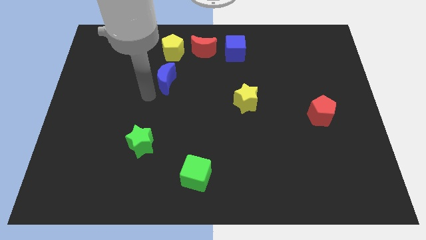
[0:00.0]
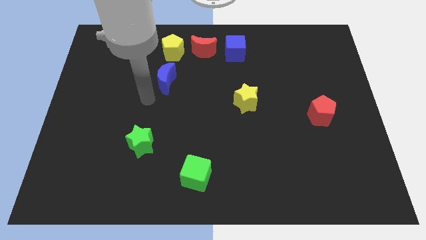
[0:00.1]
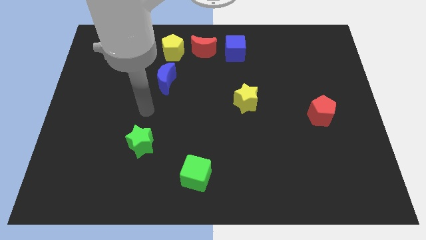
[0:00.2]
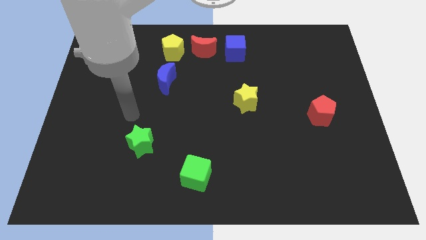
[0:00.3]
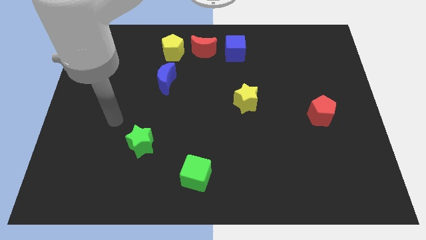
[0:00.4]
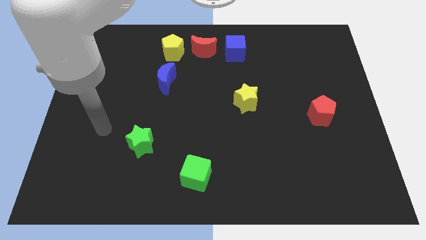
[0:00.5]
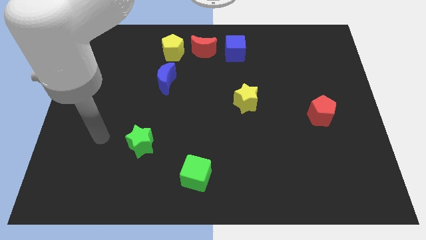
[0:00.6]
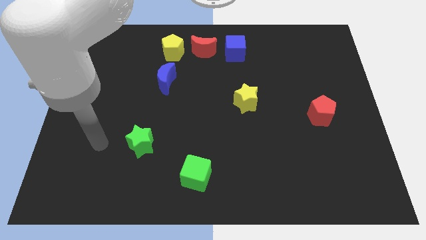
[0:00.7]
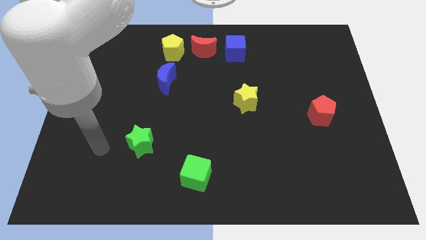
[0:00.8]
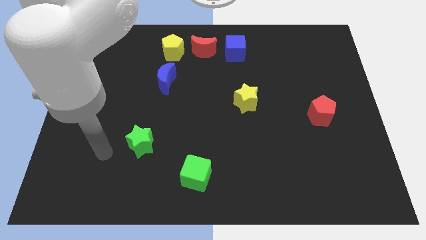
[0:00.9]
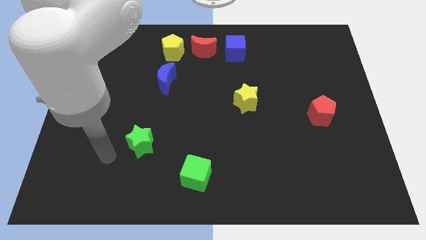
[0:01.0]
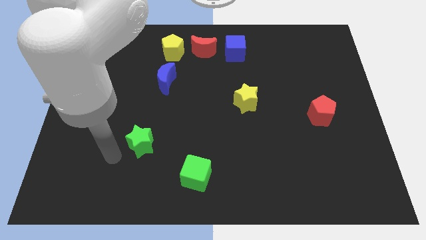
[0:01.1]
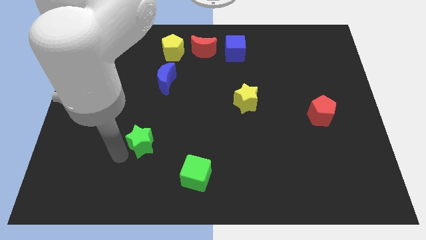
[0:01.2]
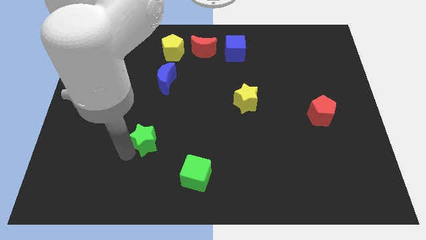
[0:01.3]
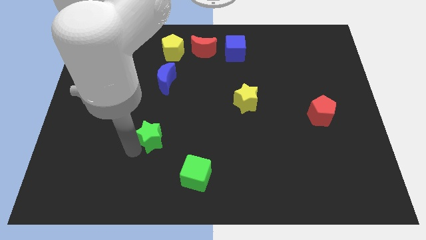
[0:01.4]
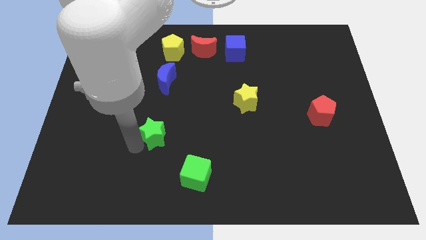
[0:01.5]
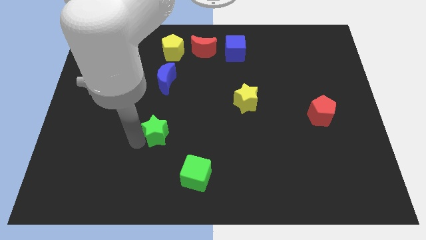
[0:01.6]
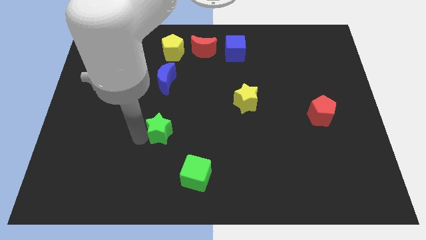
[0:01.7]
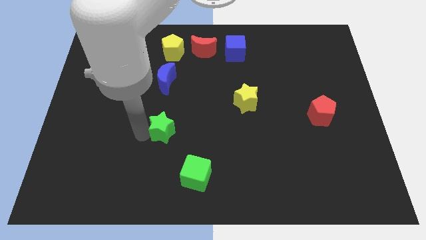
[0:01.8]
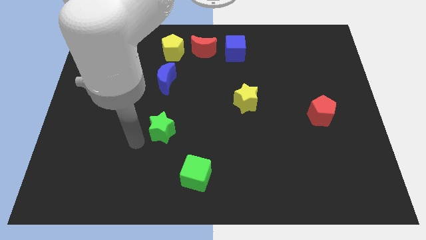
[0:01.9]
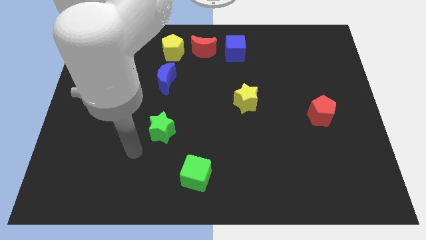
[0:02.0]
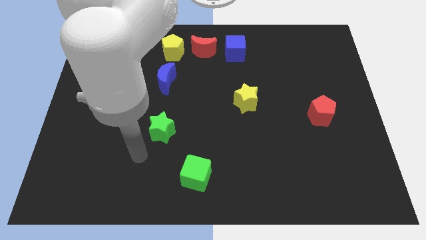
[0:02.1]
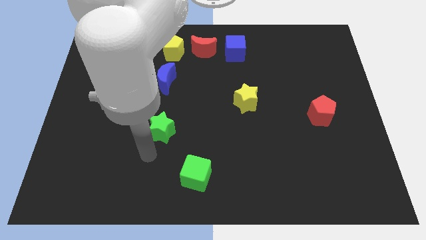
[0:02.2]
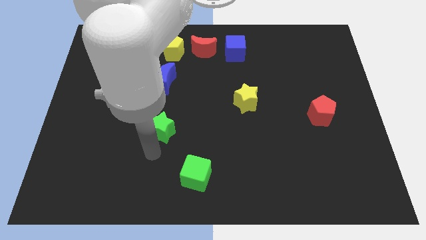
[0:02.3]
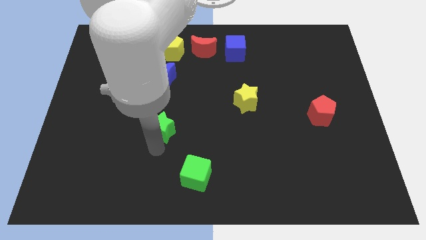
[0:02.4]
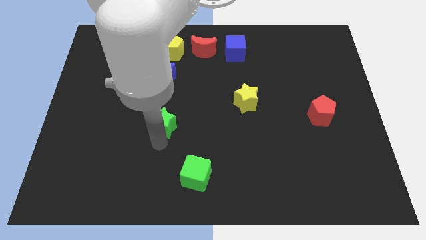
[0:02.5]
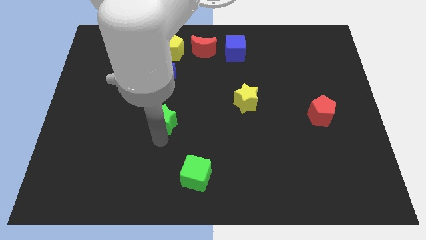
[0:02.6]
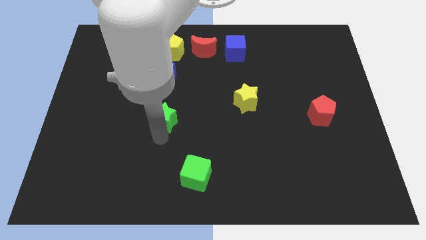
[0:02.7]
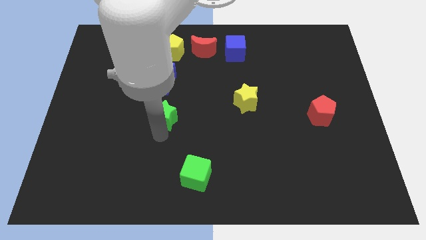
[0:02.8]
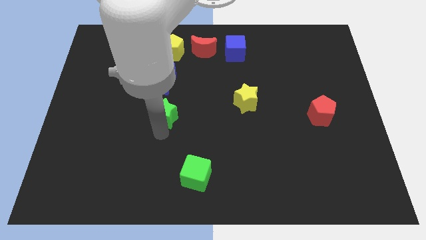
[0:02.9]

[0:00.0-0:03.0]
move the green star to the bottom of the blue crescent

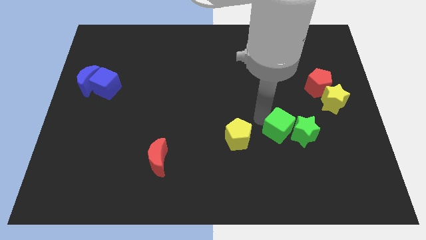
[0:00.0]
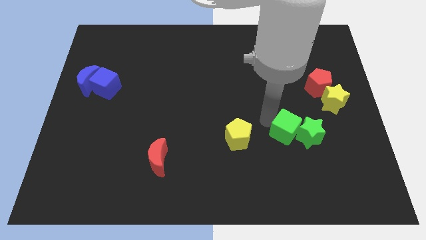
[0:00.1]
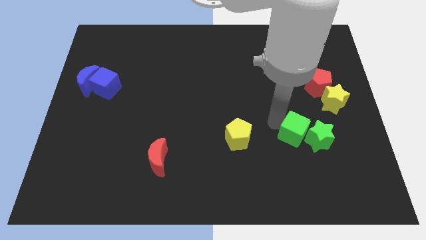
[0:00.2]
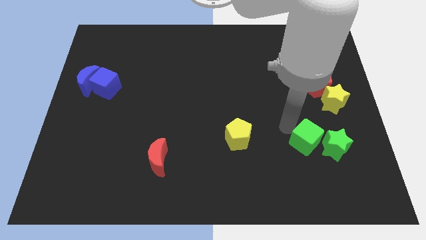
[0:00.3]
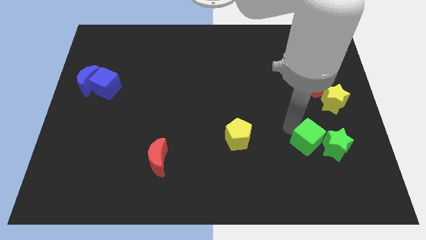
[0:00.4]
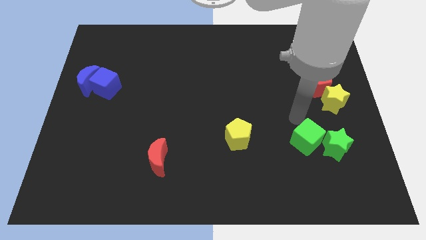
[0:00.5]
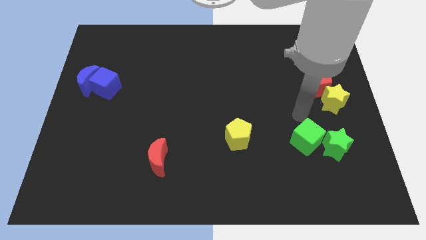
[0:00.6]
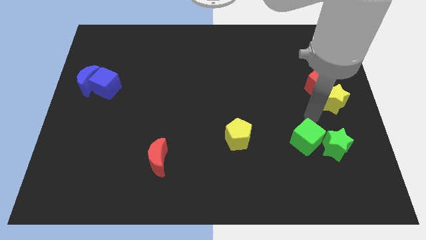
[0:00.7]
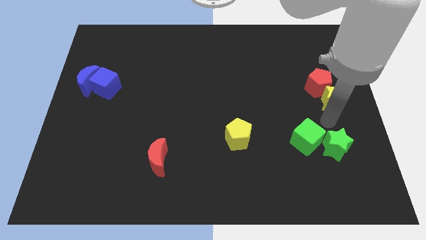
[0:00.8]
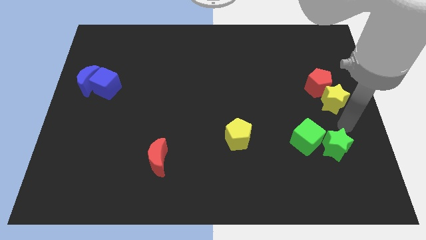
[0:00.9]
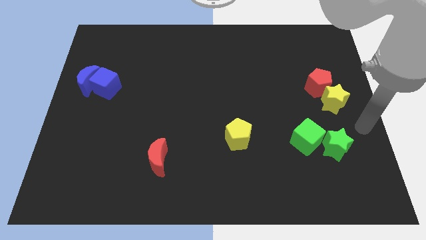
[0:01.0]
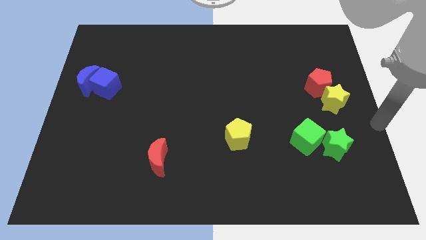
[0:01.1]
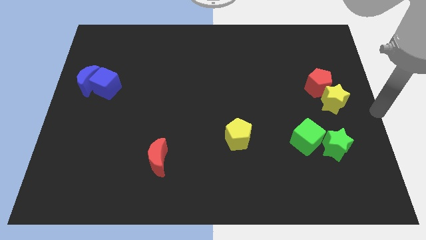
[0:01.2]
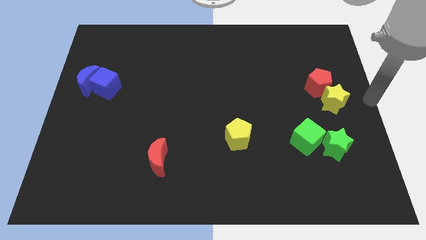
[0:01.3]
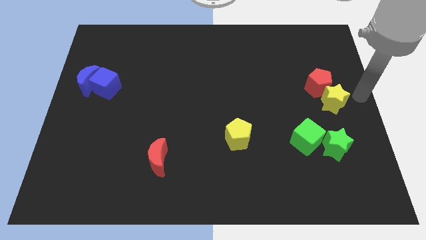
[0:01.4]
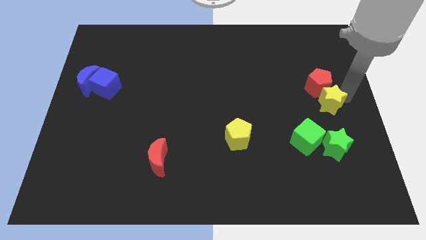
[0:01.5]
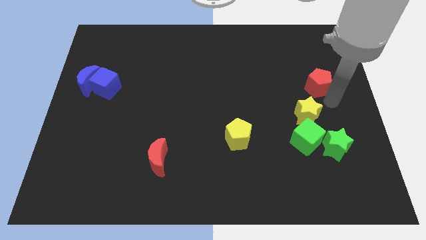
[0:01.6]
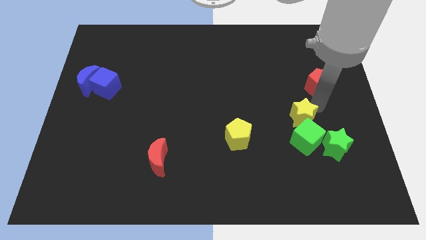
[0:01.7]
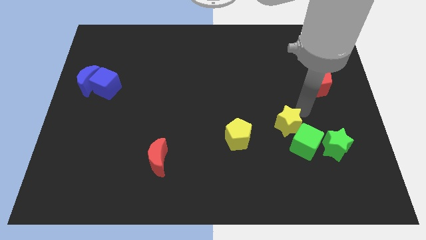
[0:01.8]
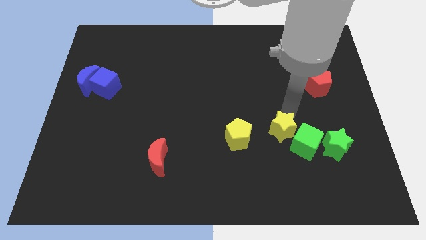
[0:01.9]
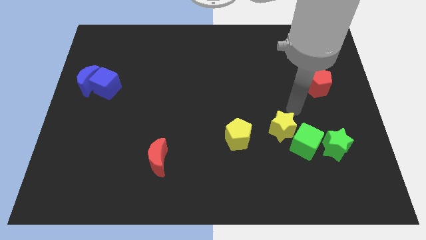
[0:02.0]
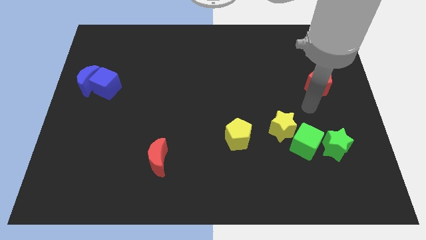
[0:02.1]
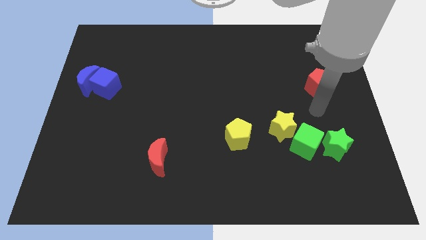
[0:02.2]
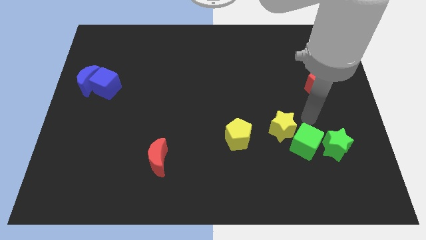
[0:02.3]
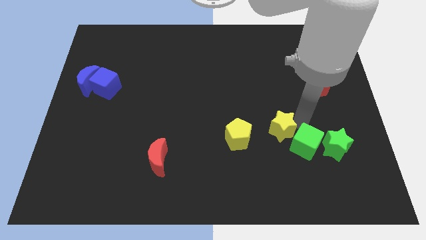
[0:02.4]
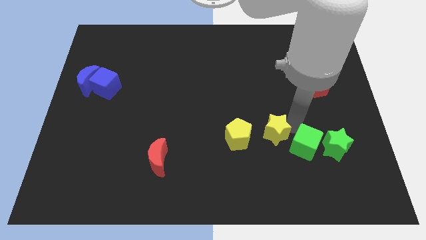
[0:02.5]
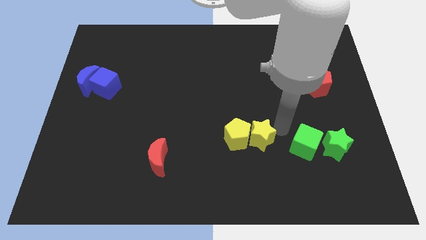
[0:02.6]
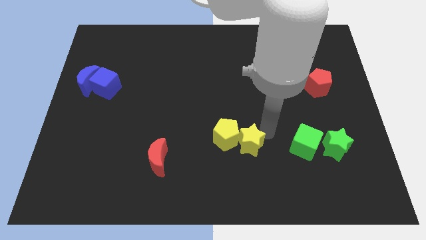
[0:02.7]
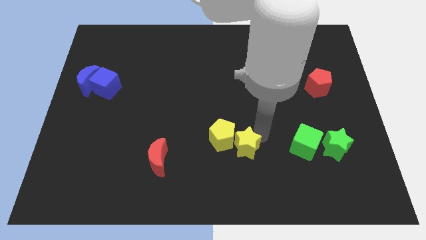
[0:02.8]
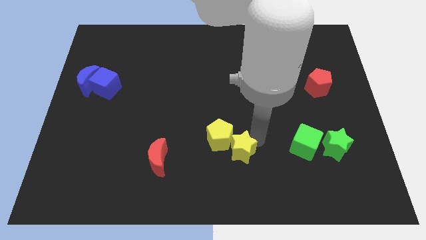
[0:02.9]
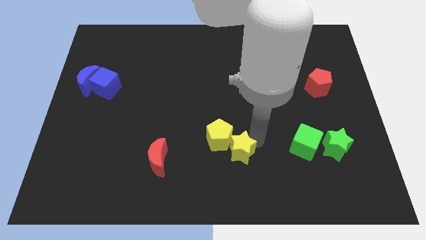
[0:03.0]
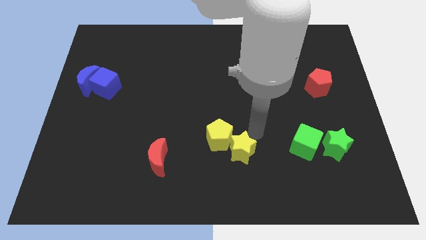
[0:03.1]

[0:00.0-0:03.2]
place the yellow star left to the green cube

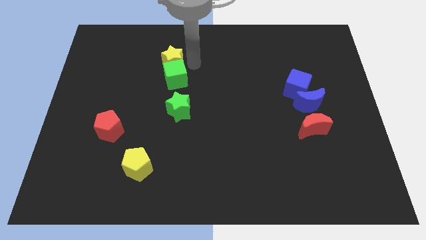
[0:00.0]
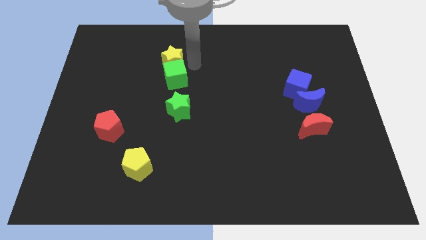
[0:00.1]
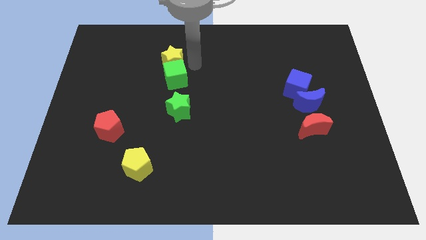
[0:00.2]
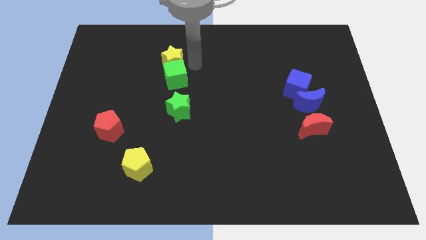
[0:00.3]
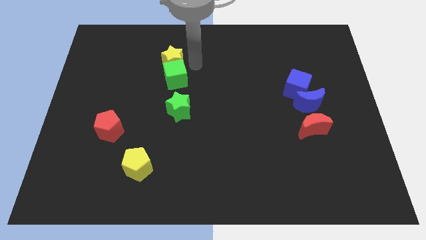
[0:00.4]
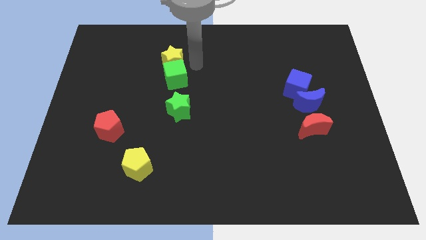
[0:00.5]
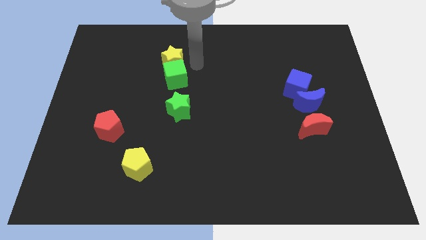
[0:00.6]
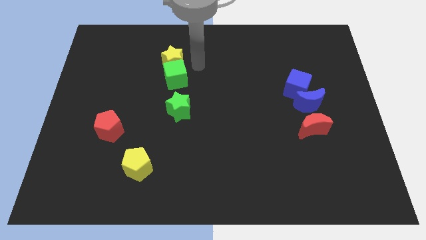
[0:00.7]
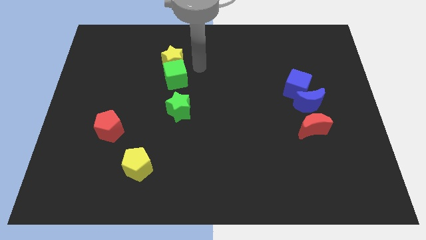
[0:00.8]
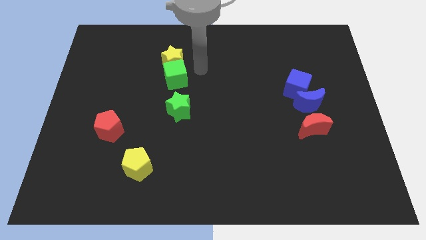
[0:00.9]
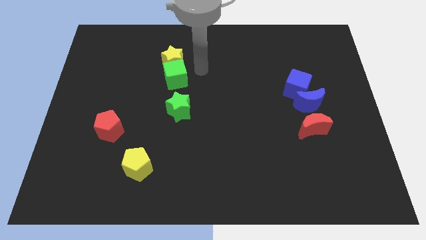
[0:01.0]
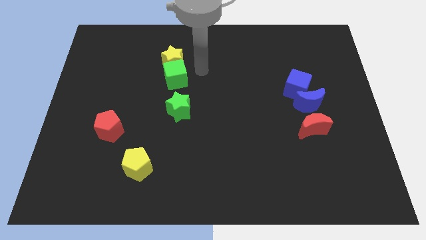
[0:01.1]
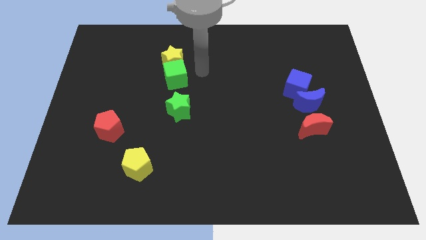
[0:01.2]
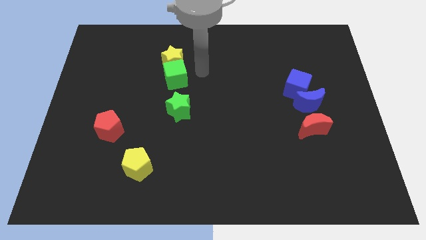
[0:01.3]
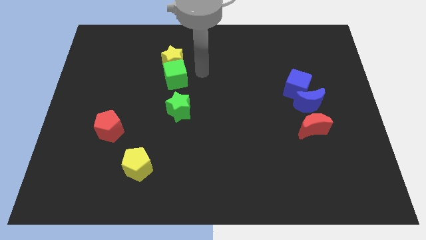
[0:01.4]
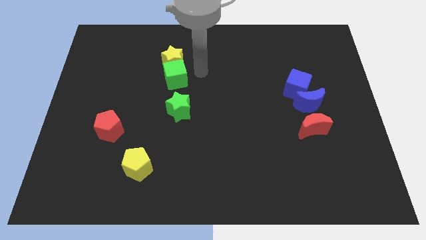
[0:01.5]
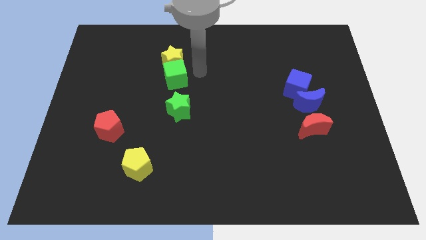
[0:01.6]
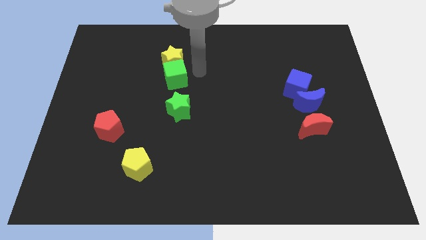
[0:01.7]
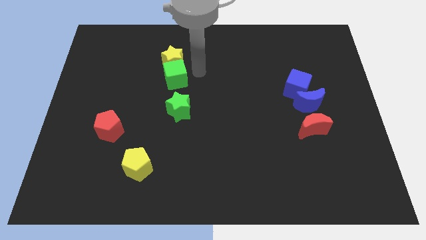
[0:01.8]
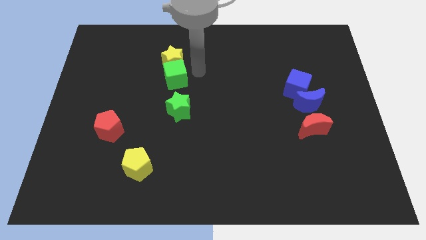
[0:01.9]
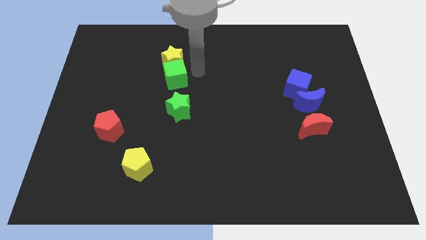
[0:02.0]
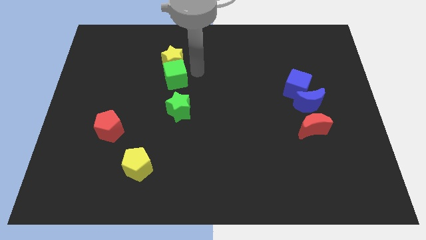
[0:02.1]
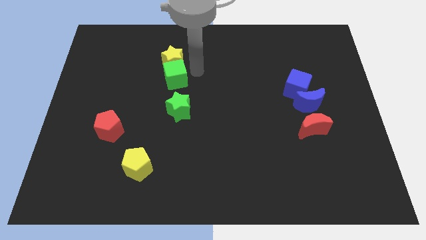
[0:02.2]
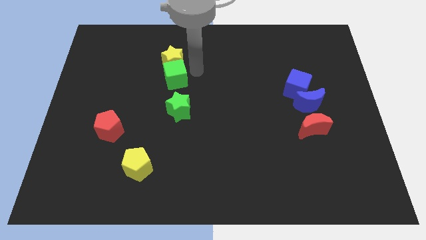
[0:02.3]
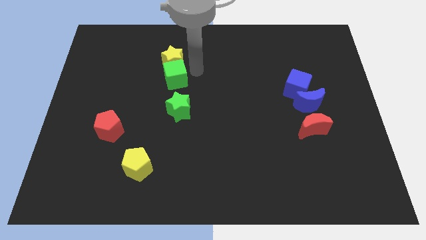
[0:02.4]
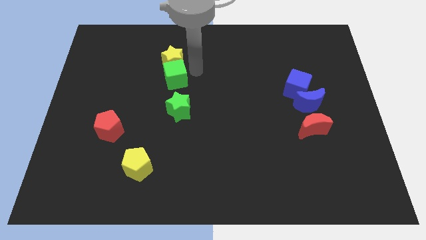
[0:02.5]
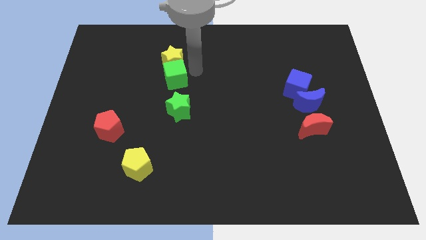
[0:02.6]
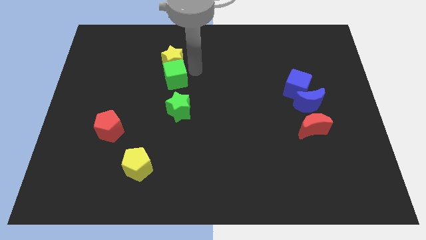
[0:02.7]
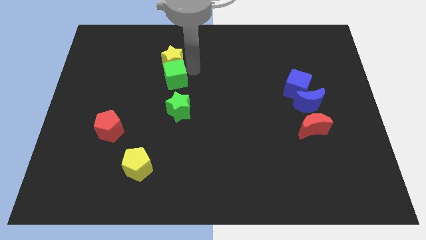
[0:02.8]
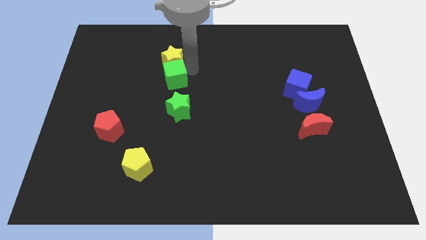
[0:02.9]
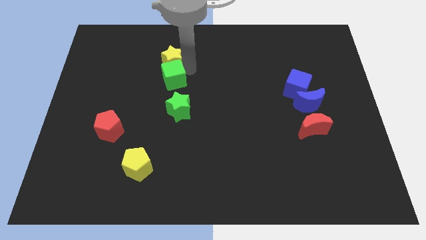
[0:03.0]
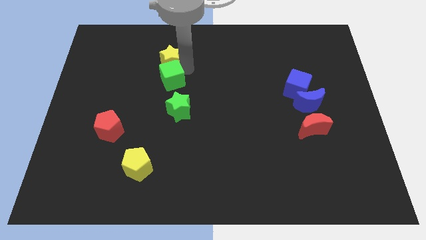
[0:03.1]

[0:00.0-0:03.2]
move the arm right to the green cube
